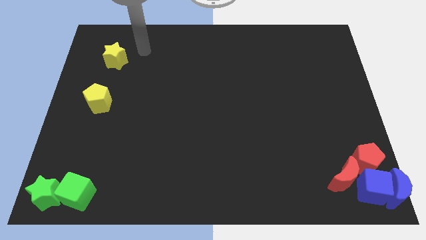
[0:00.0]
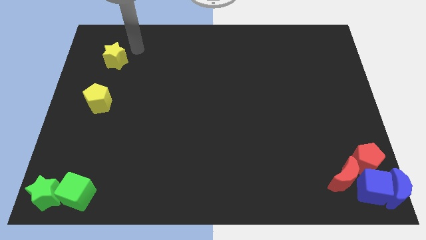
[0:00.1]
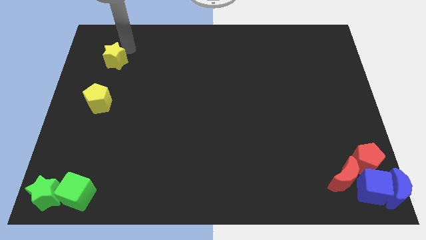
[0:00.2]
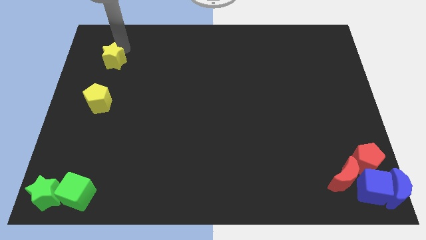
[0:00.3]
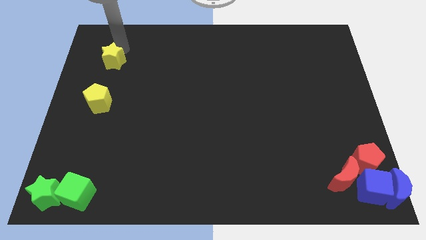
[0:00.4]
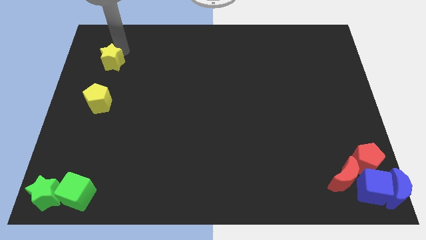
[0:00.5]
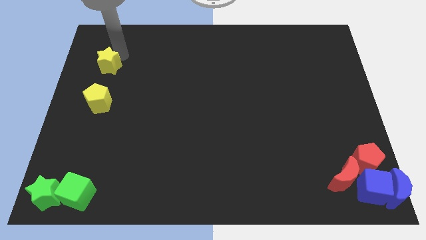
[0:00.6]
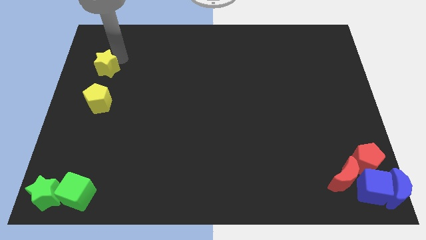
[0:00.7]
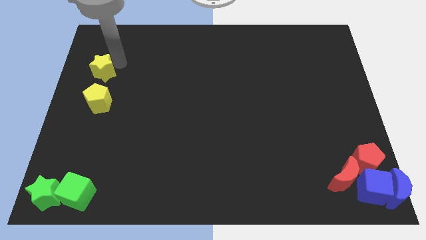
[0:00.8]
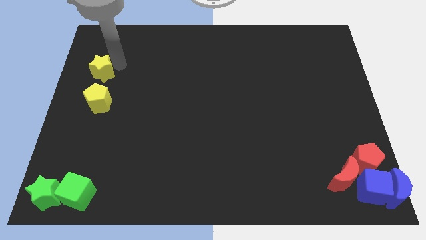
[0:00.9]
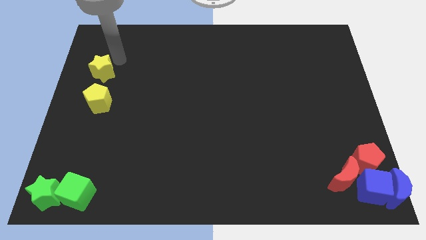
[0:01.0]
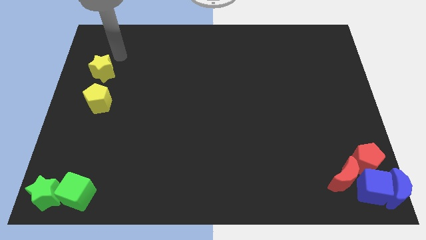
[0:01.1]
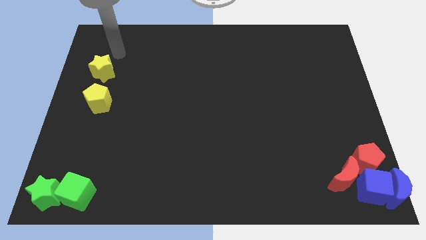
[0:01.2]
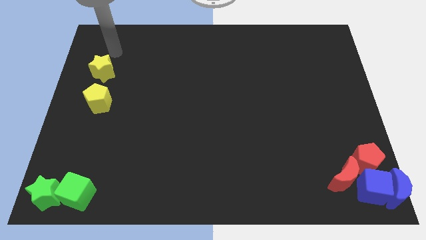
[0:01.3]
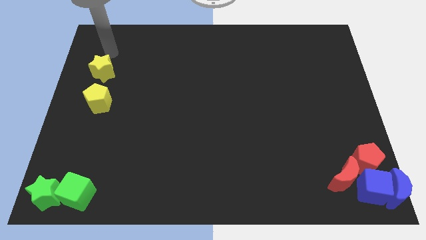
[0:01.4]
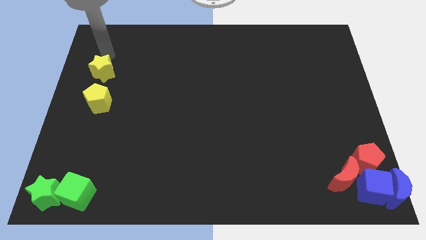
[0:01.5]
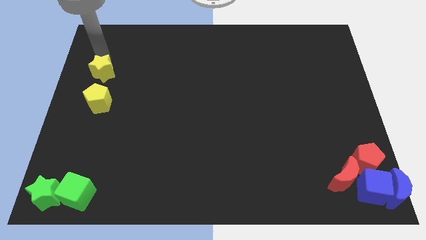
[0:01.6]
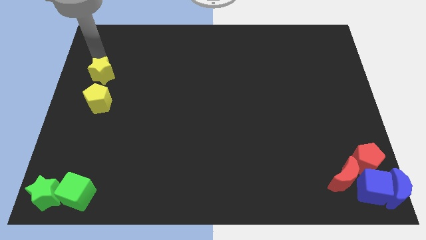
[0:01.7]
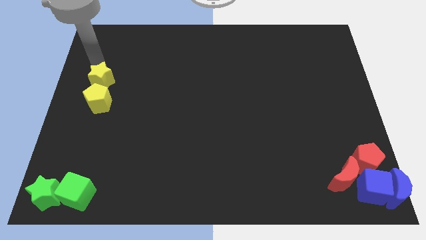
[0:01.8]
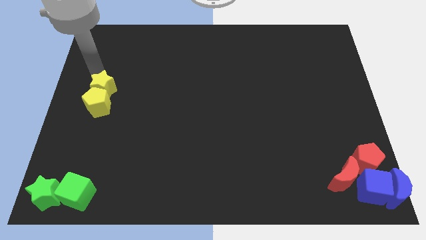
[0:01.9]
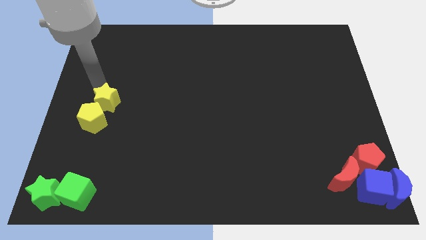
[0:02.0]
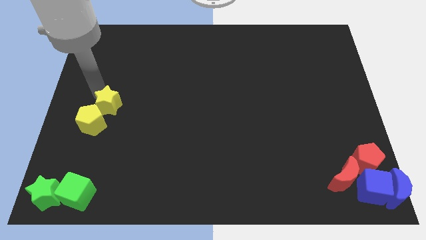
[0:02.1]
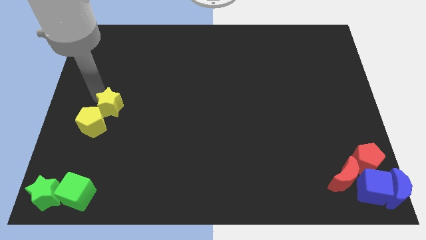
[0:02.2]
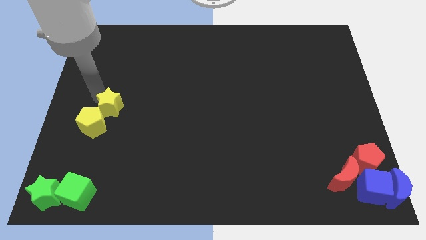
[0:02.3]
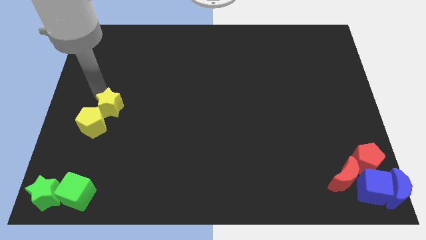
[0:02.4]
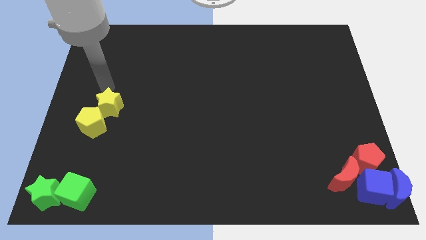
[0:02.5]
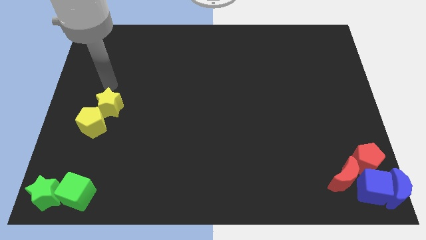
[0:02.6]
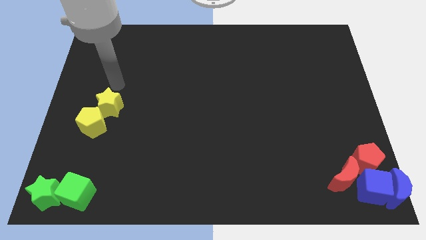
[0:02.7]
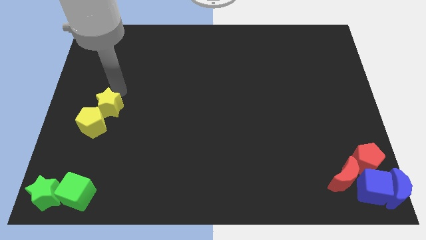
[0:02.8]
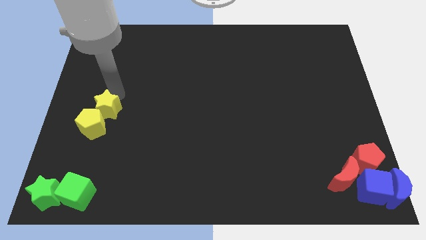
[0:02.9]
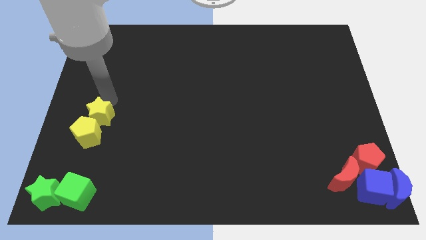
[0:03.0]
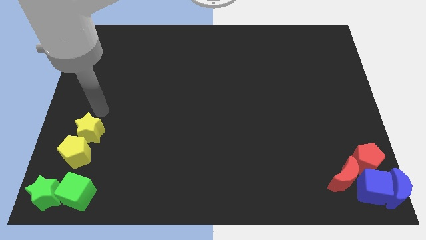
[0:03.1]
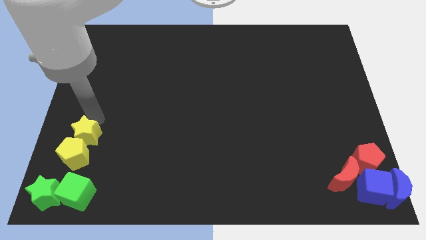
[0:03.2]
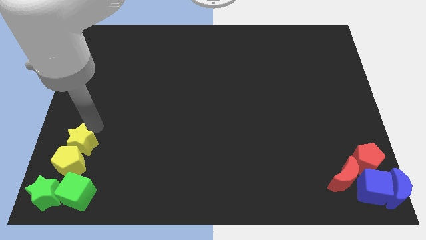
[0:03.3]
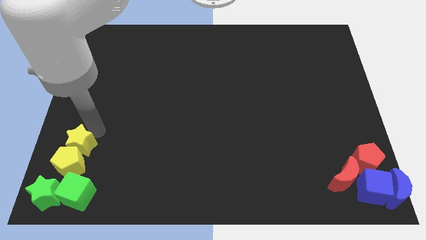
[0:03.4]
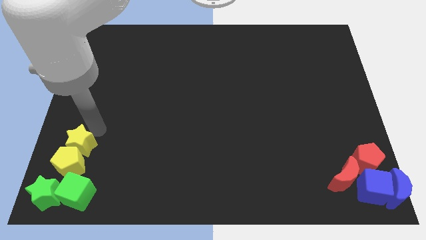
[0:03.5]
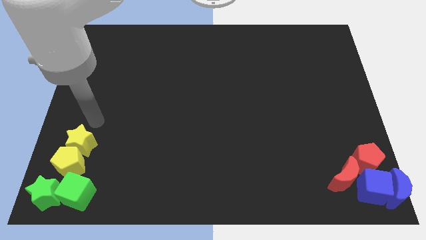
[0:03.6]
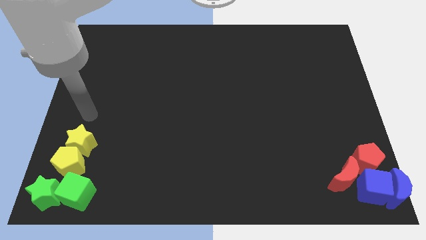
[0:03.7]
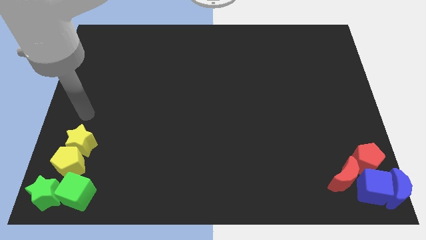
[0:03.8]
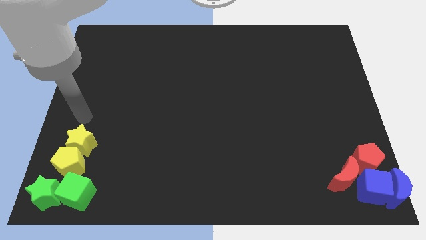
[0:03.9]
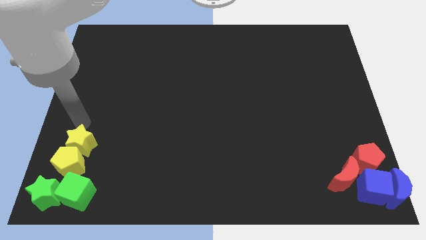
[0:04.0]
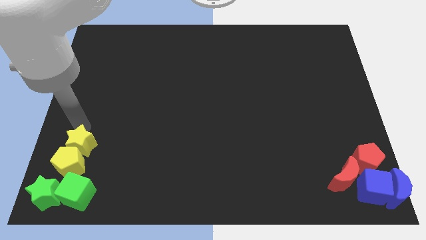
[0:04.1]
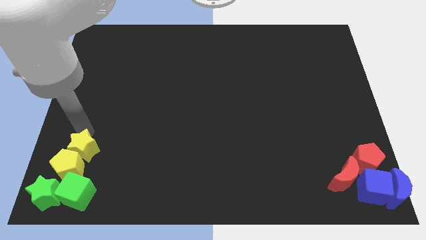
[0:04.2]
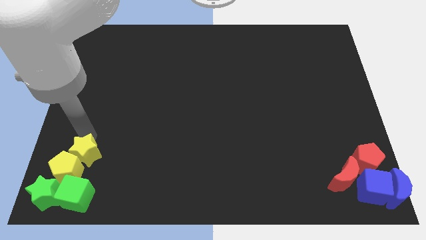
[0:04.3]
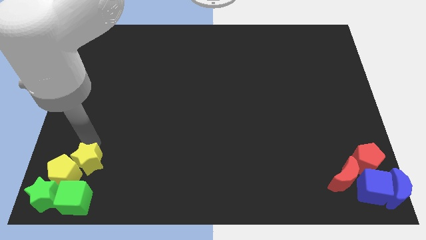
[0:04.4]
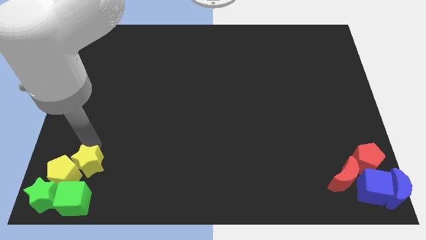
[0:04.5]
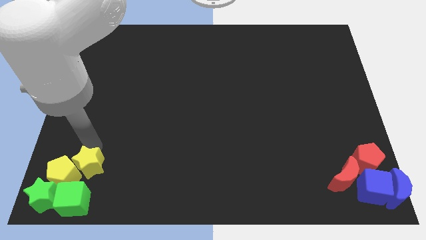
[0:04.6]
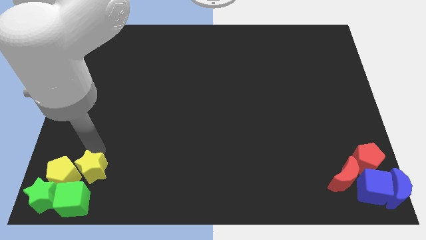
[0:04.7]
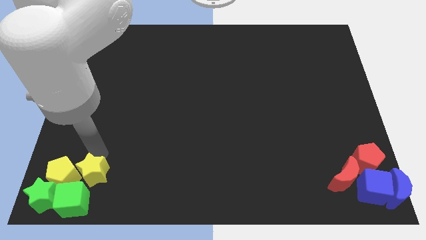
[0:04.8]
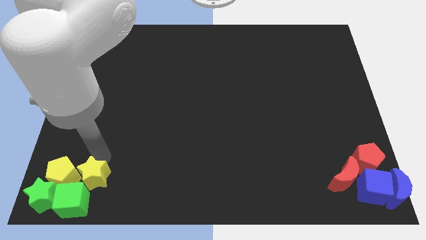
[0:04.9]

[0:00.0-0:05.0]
place yellow blocks above green blocks

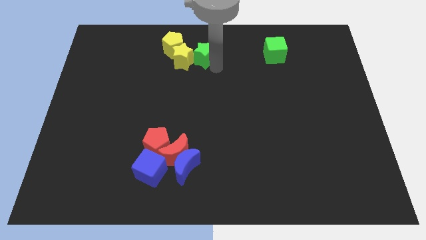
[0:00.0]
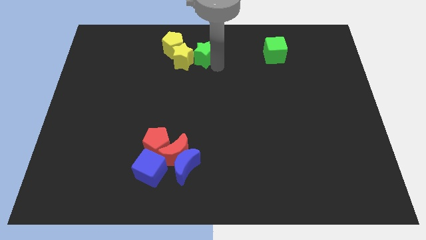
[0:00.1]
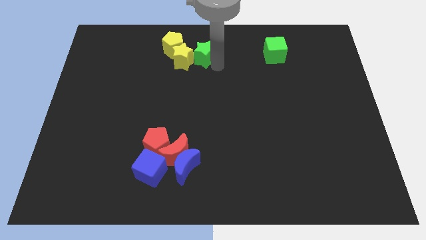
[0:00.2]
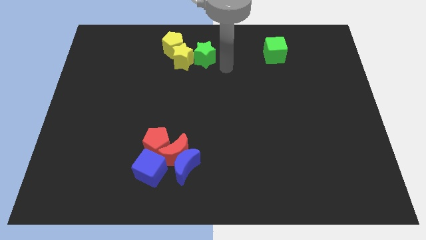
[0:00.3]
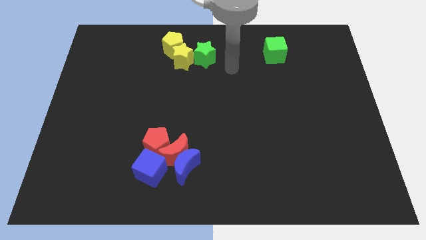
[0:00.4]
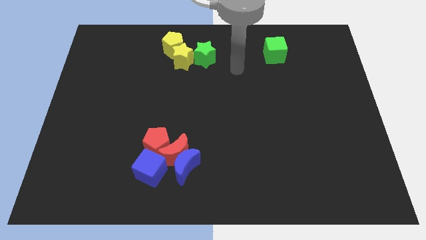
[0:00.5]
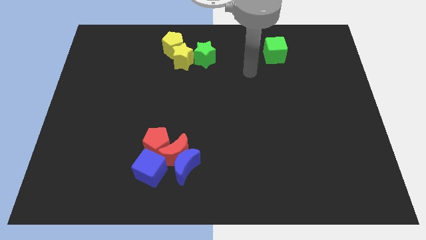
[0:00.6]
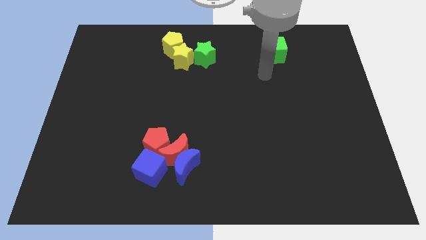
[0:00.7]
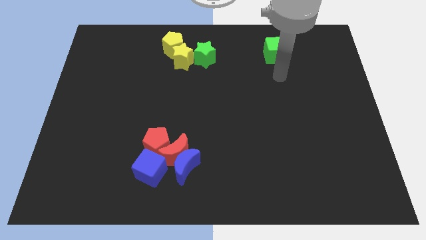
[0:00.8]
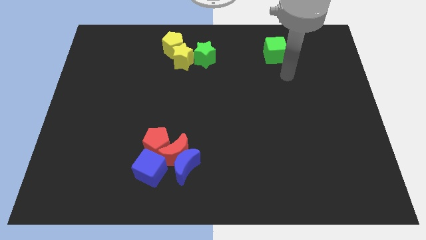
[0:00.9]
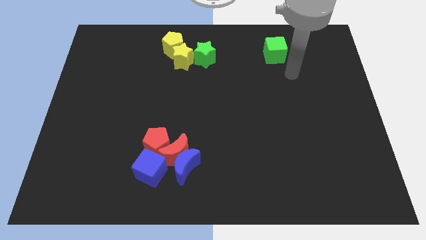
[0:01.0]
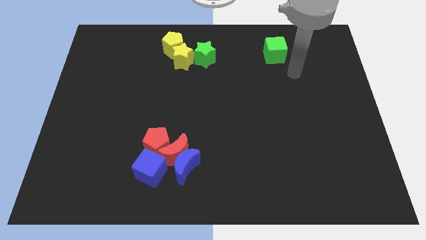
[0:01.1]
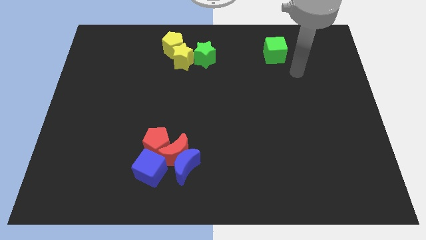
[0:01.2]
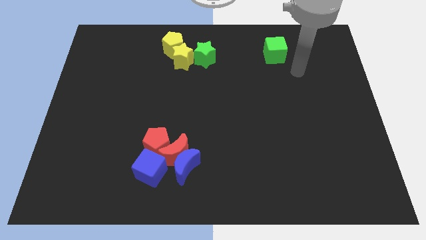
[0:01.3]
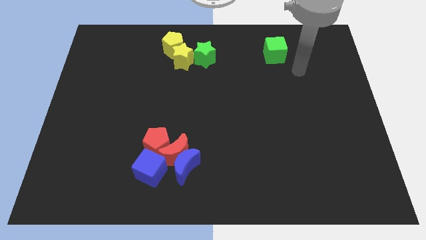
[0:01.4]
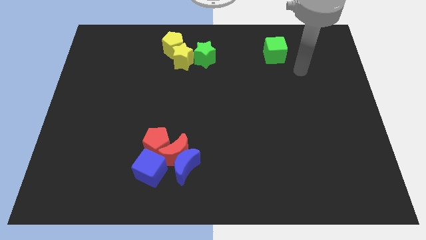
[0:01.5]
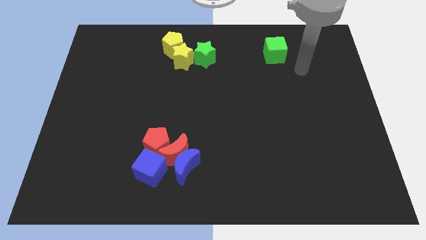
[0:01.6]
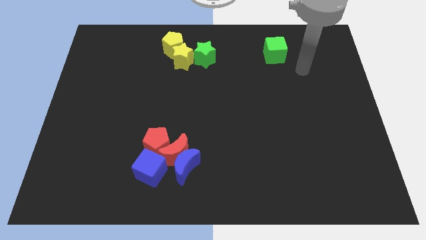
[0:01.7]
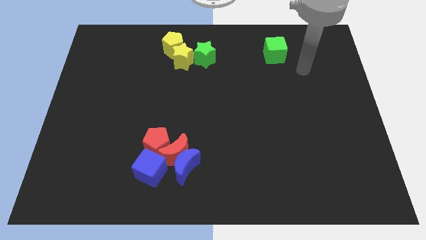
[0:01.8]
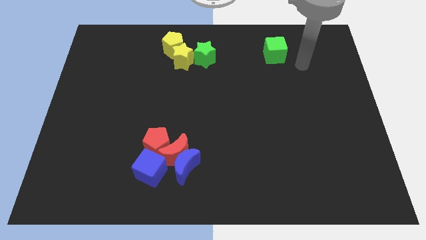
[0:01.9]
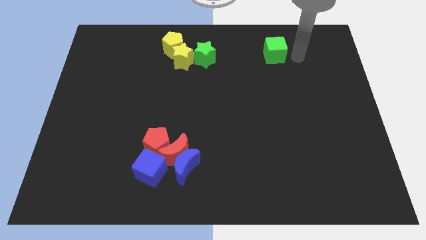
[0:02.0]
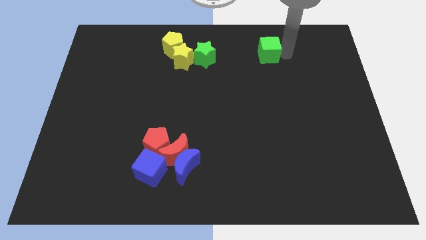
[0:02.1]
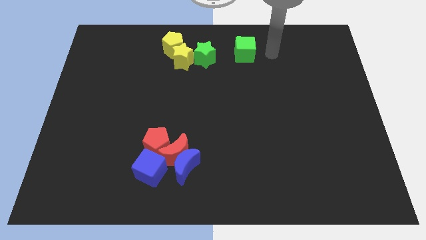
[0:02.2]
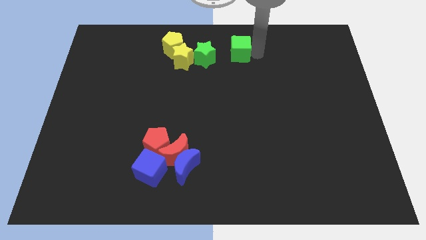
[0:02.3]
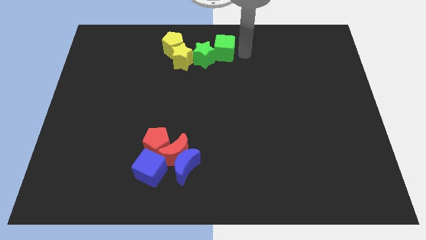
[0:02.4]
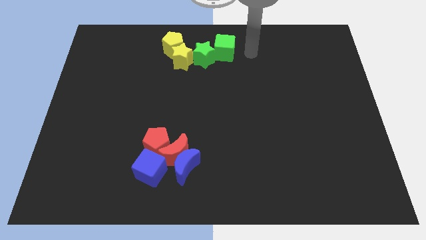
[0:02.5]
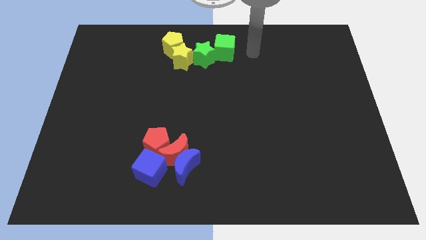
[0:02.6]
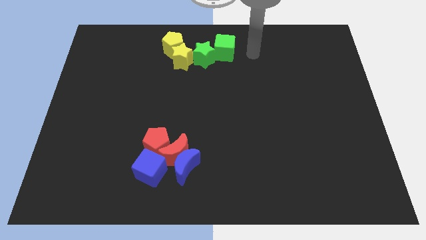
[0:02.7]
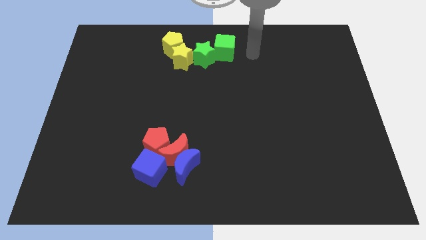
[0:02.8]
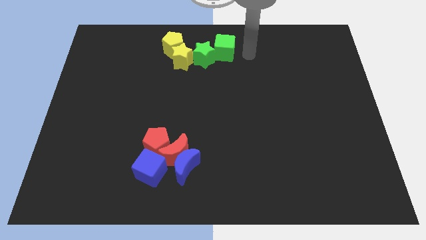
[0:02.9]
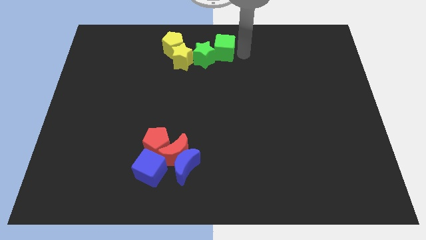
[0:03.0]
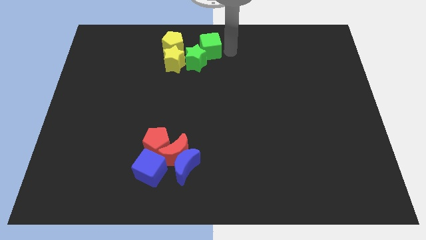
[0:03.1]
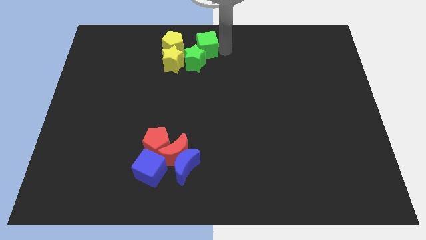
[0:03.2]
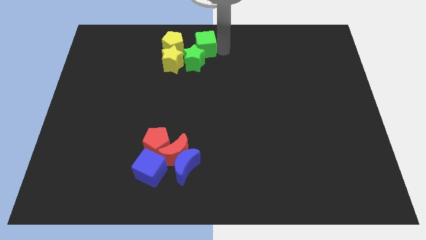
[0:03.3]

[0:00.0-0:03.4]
push the green cube into a group of blocks at top side

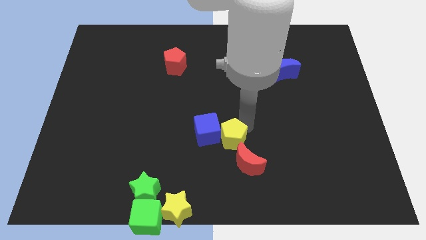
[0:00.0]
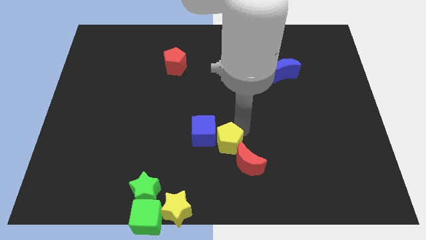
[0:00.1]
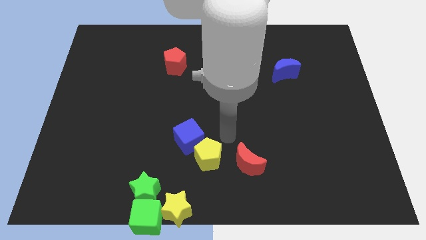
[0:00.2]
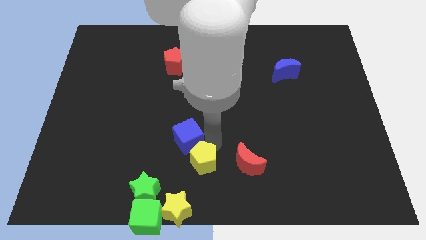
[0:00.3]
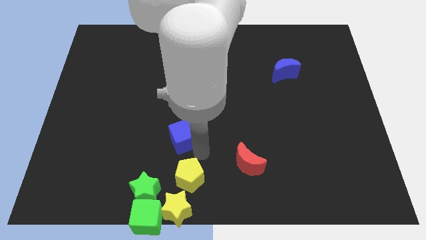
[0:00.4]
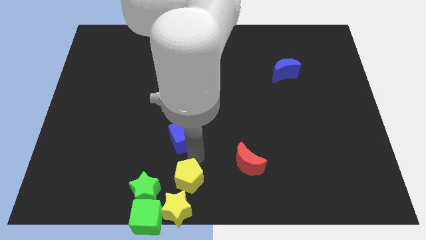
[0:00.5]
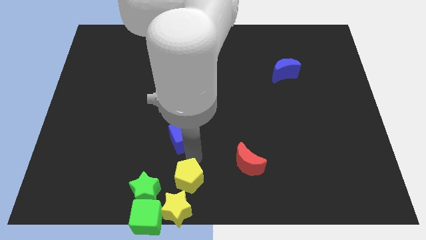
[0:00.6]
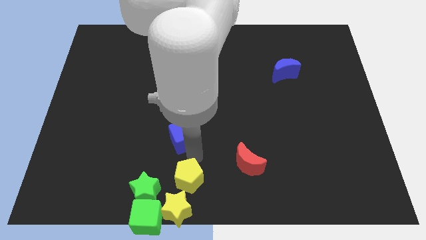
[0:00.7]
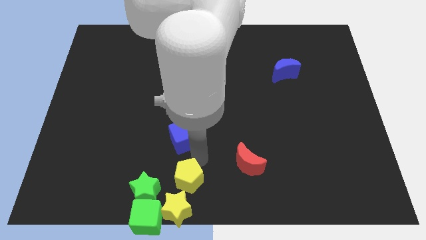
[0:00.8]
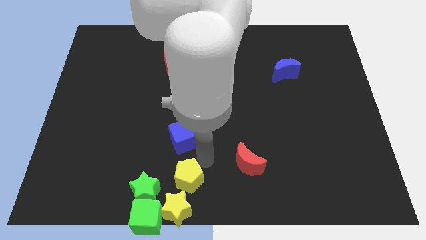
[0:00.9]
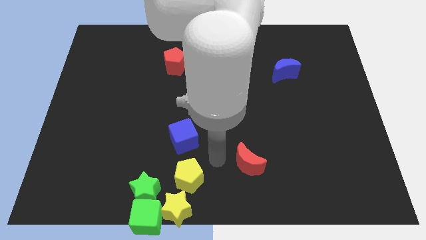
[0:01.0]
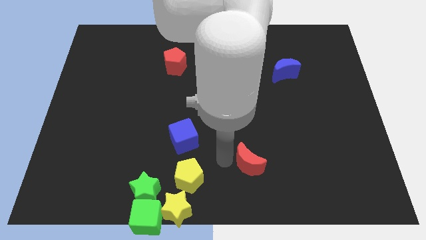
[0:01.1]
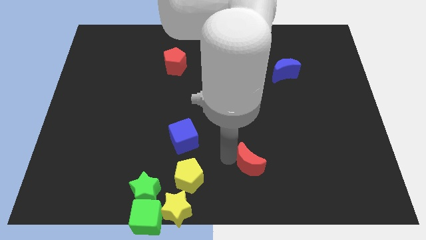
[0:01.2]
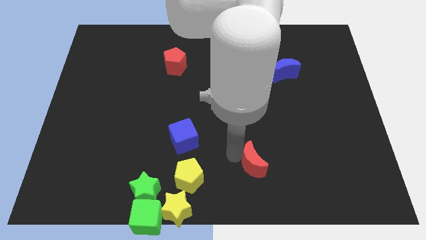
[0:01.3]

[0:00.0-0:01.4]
push the yellow pentagon diagonally to the top right of the yellow star
